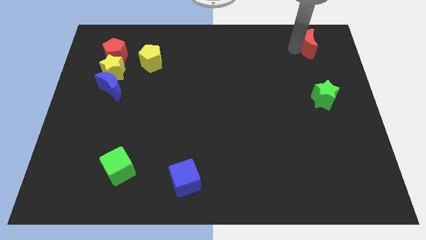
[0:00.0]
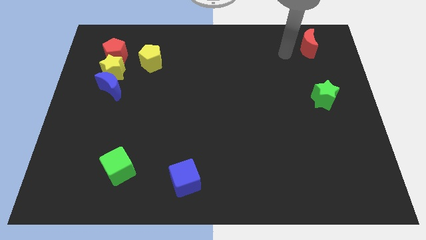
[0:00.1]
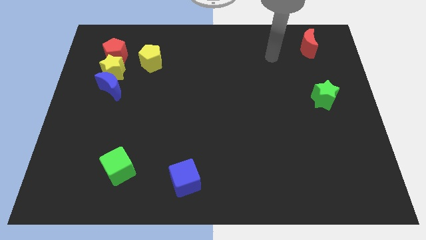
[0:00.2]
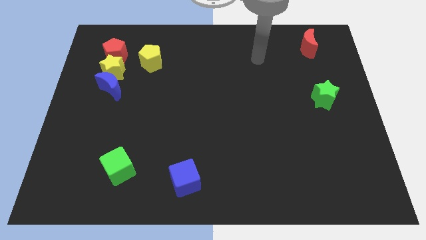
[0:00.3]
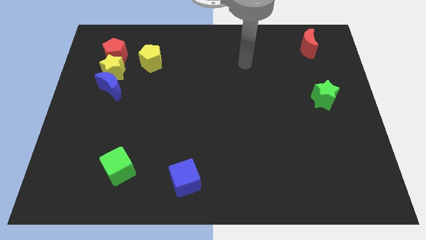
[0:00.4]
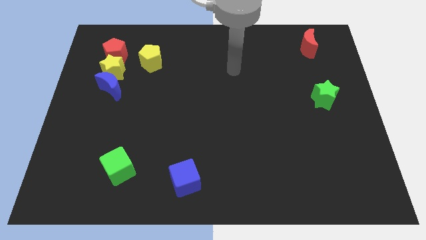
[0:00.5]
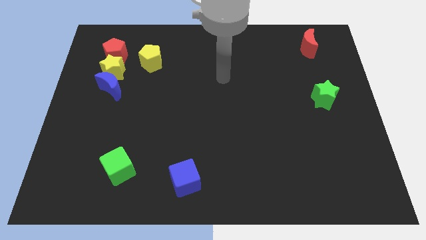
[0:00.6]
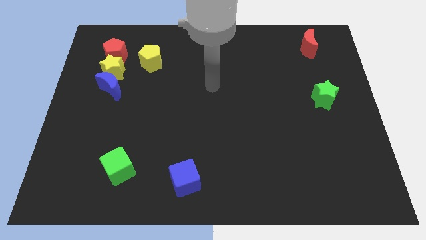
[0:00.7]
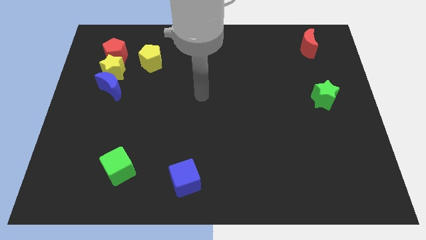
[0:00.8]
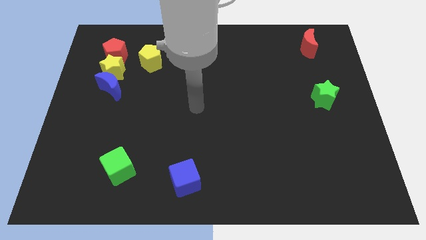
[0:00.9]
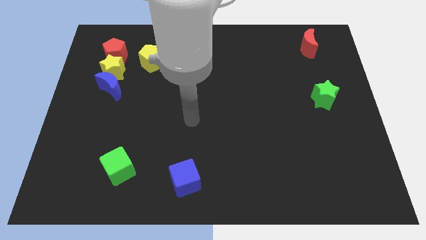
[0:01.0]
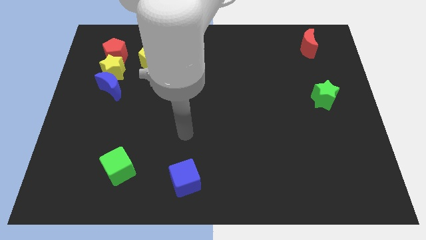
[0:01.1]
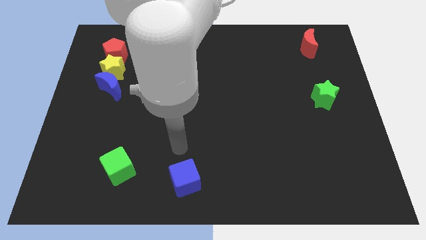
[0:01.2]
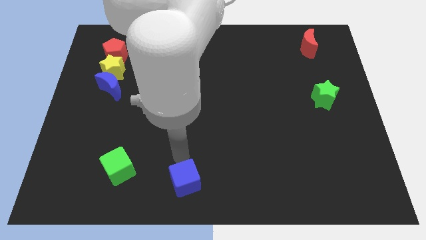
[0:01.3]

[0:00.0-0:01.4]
move your arm on top of the blue cube

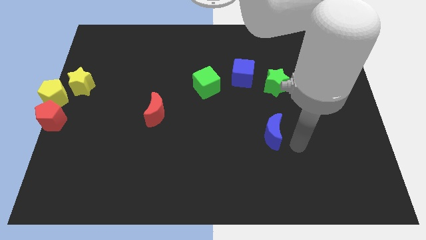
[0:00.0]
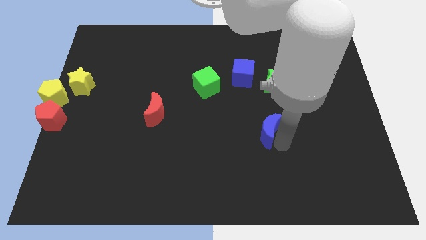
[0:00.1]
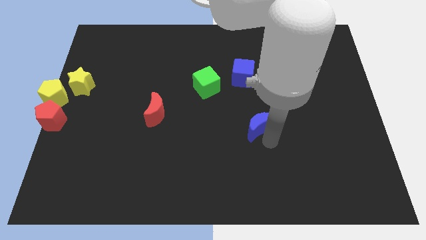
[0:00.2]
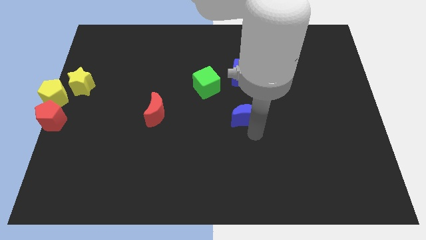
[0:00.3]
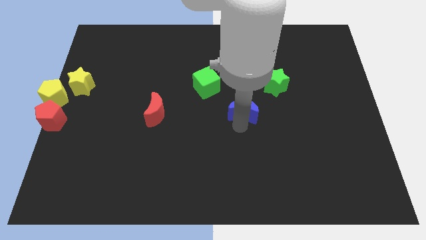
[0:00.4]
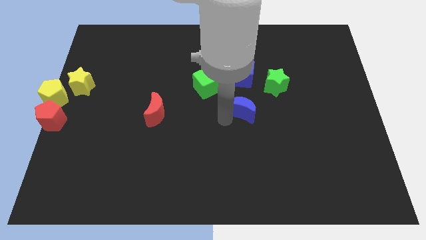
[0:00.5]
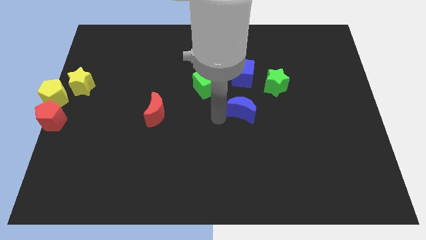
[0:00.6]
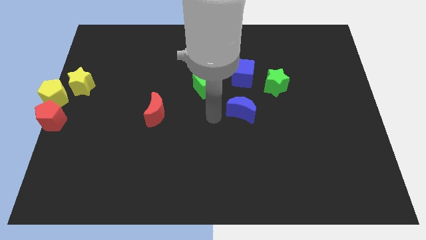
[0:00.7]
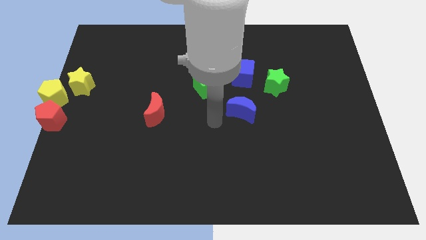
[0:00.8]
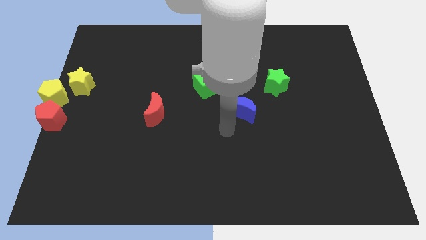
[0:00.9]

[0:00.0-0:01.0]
move the blue moon towards the center of the board

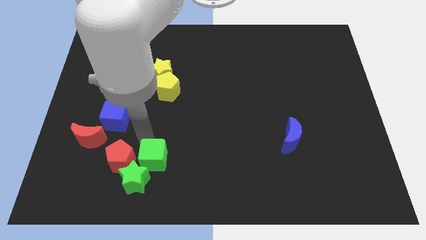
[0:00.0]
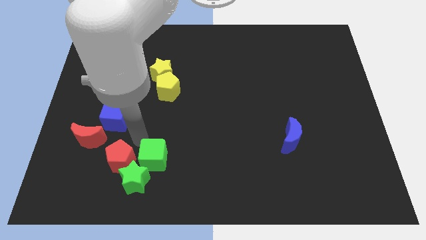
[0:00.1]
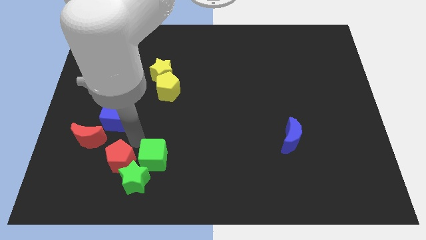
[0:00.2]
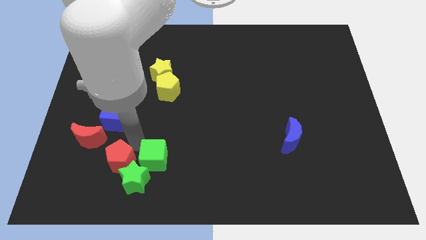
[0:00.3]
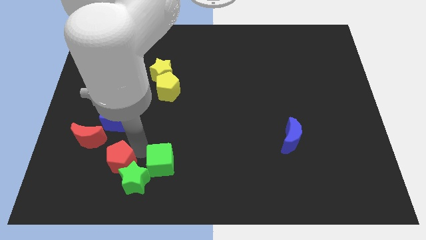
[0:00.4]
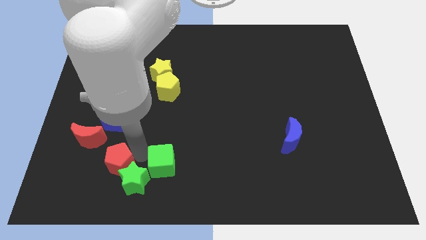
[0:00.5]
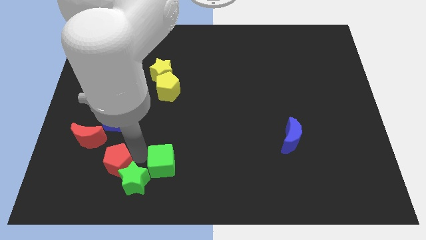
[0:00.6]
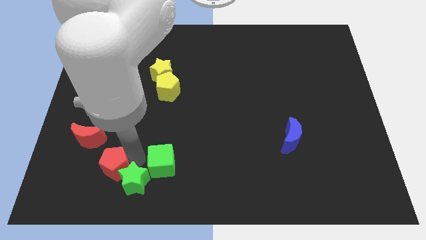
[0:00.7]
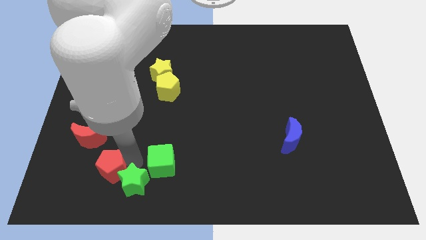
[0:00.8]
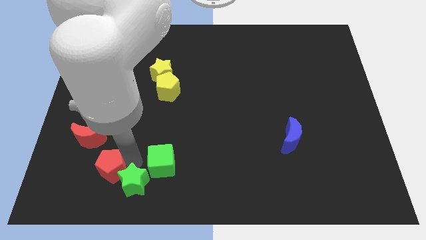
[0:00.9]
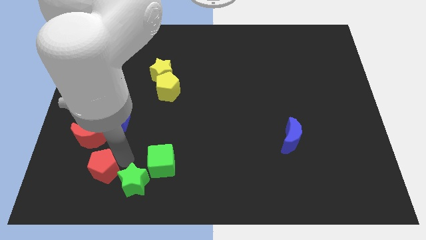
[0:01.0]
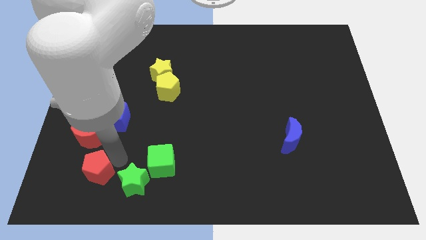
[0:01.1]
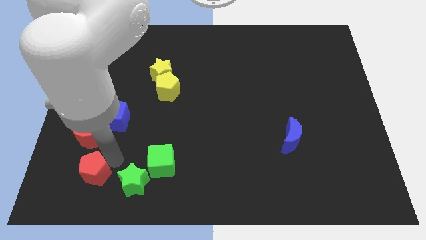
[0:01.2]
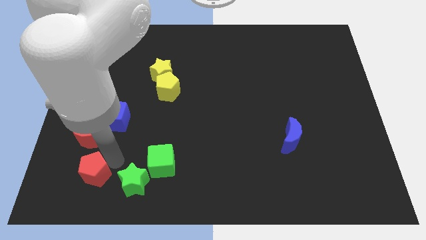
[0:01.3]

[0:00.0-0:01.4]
separate the red pentagon from green star

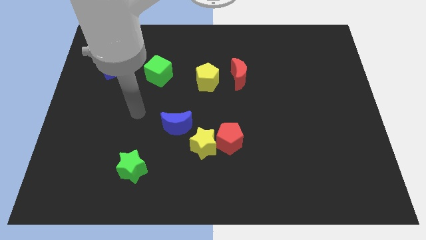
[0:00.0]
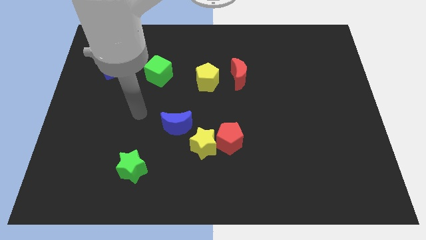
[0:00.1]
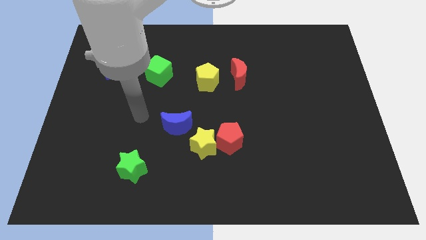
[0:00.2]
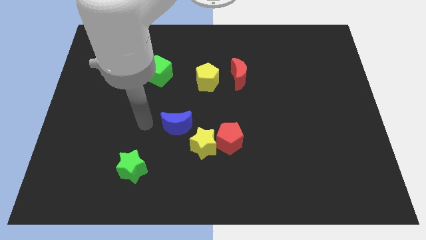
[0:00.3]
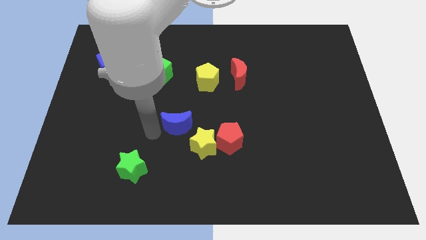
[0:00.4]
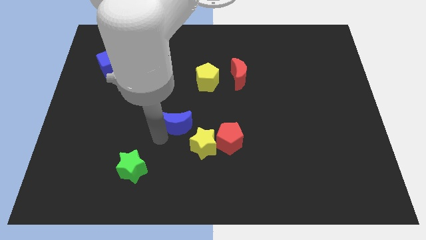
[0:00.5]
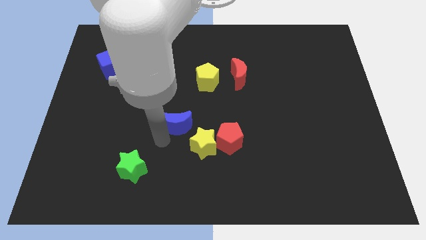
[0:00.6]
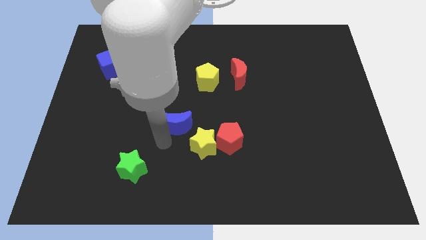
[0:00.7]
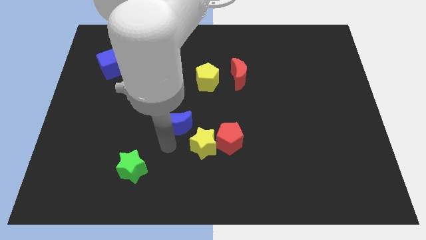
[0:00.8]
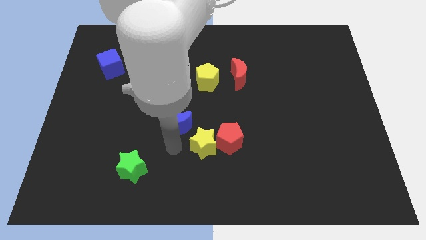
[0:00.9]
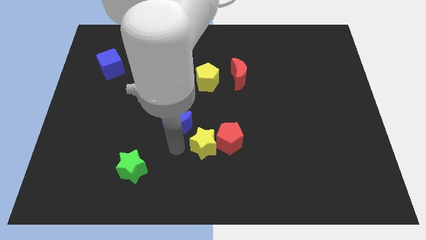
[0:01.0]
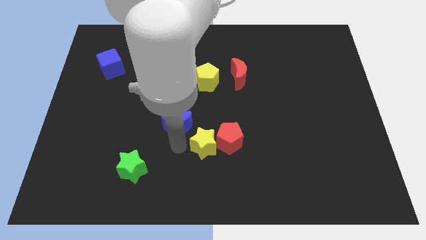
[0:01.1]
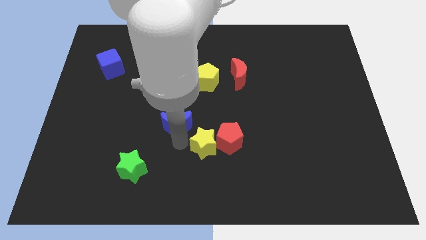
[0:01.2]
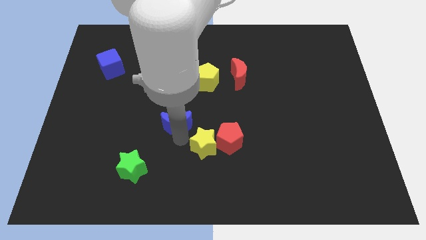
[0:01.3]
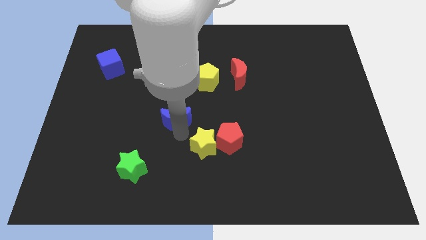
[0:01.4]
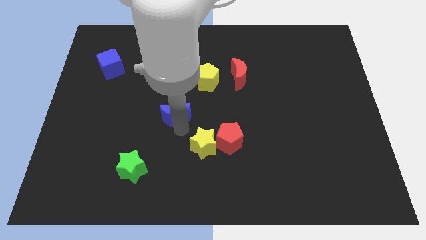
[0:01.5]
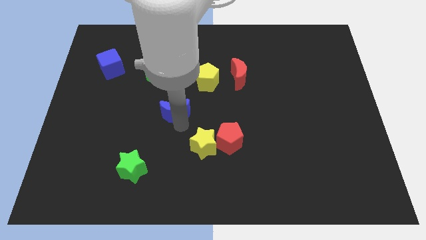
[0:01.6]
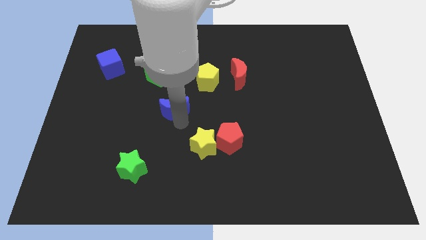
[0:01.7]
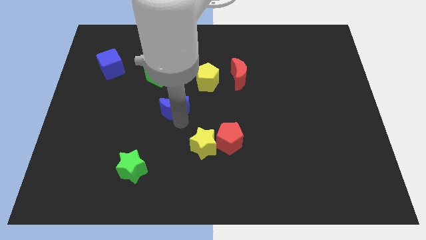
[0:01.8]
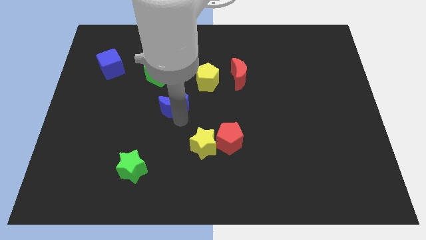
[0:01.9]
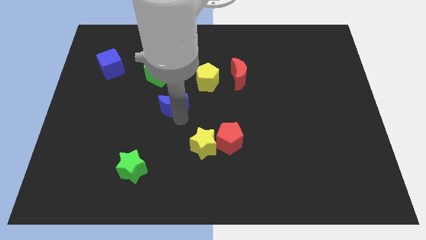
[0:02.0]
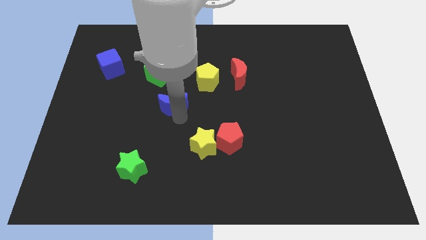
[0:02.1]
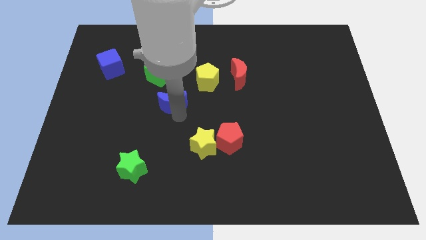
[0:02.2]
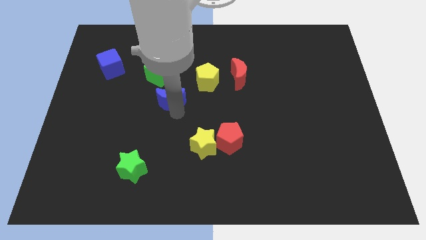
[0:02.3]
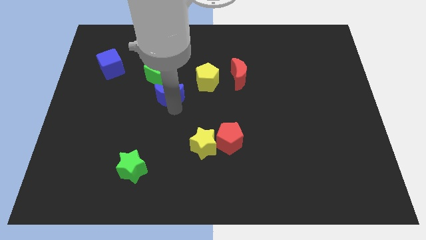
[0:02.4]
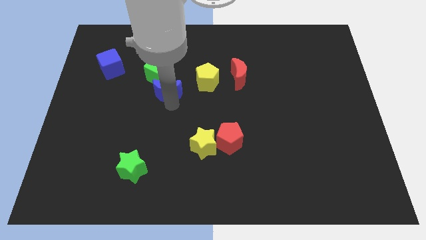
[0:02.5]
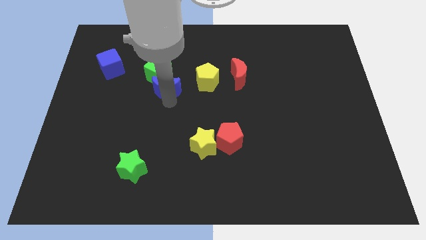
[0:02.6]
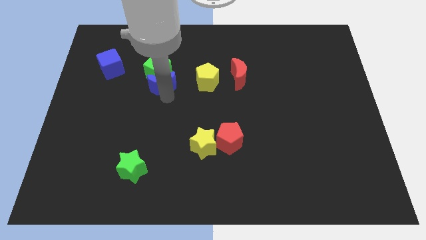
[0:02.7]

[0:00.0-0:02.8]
push the blue crescent towards the green cube

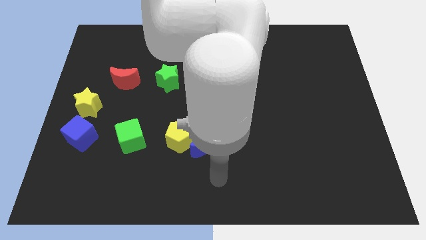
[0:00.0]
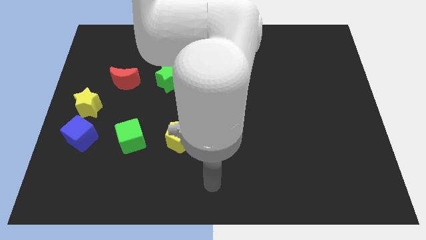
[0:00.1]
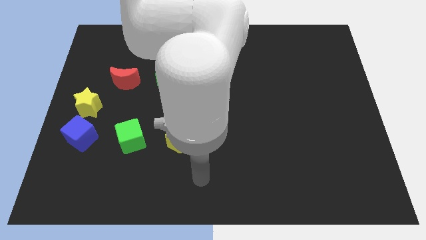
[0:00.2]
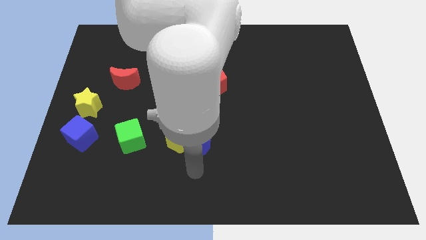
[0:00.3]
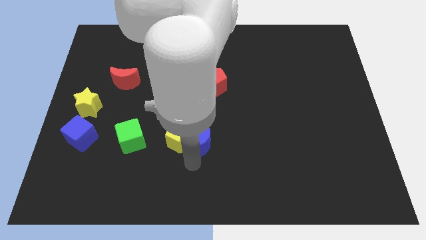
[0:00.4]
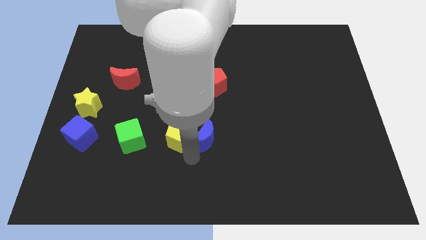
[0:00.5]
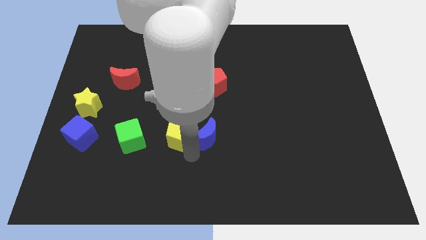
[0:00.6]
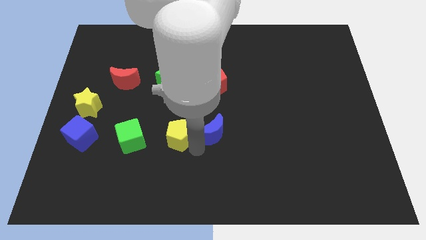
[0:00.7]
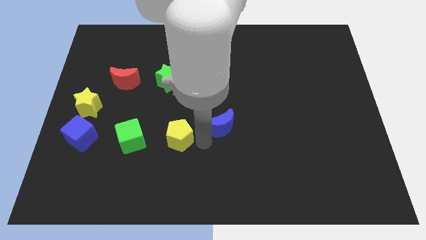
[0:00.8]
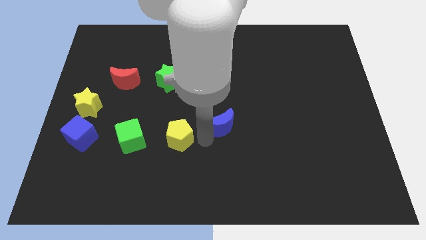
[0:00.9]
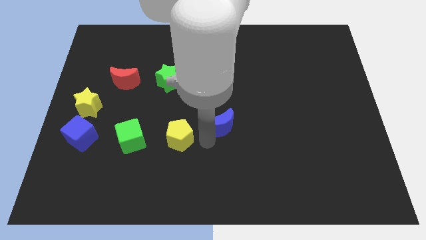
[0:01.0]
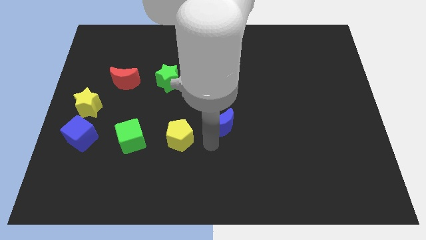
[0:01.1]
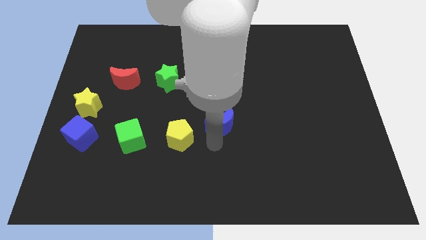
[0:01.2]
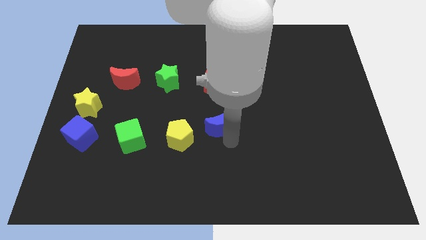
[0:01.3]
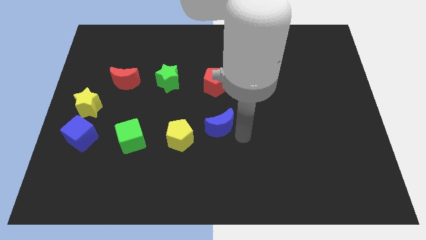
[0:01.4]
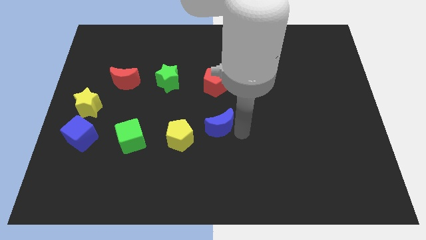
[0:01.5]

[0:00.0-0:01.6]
place the blue moon vertically below the red pentagon

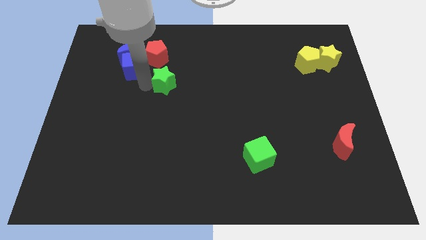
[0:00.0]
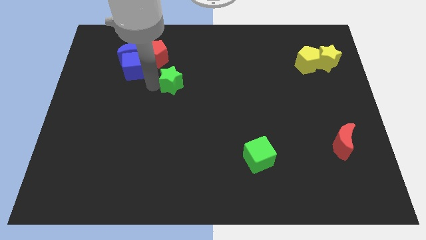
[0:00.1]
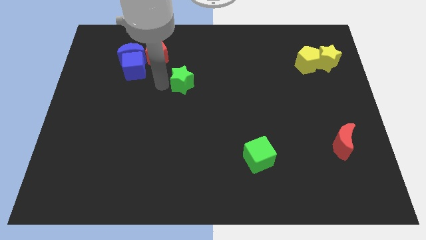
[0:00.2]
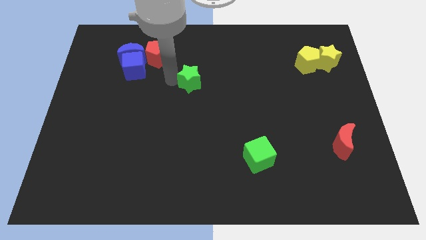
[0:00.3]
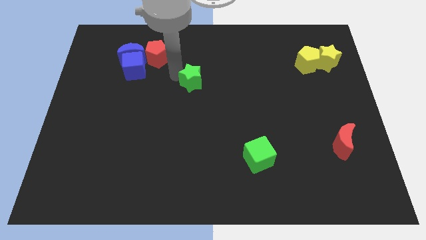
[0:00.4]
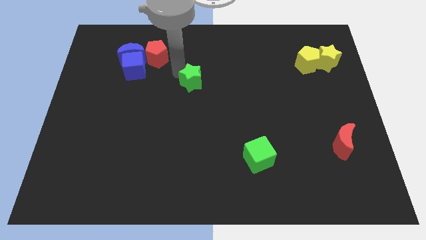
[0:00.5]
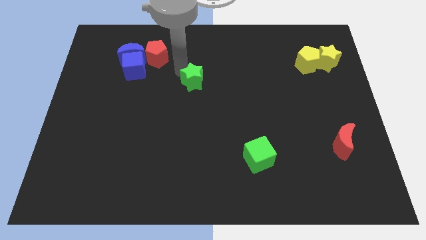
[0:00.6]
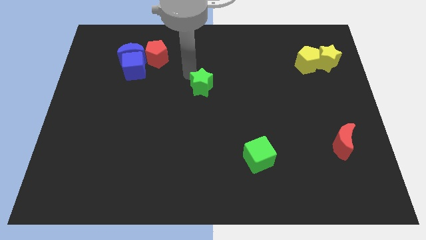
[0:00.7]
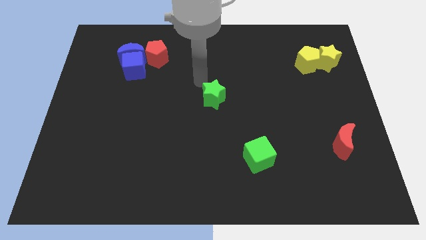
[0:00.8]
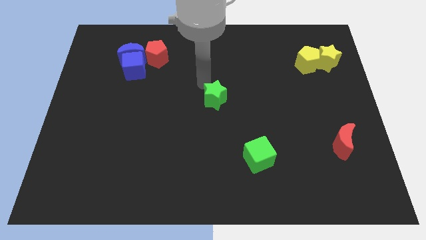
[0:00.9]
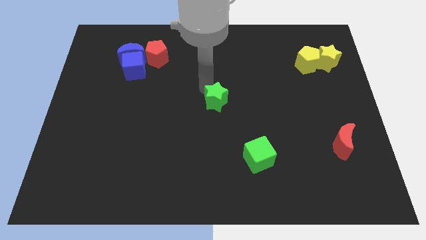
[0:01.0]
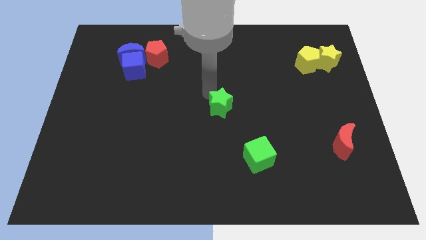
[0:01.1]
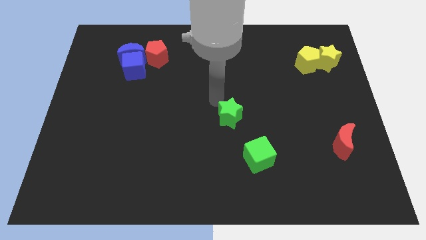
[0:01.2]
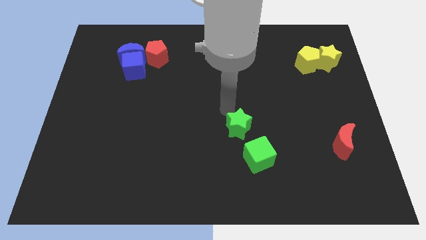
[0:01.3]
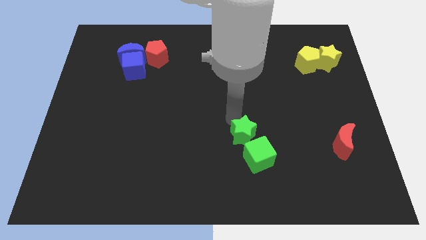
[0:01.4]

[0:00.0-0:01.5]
move the green star close to the green cube
